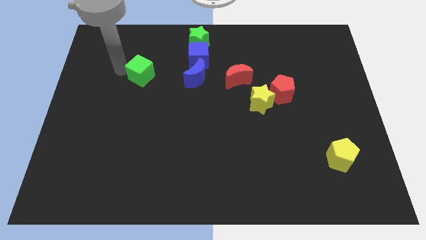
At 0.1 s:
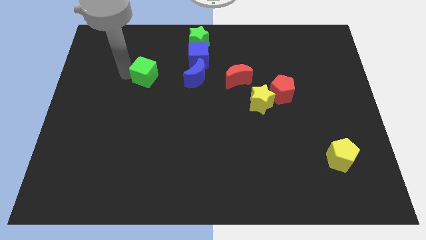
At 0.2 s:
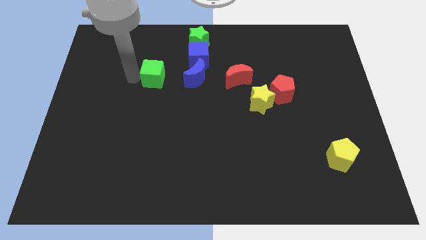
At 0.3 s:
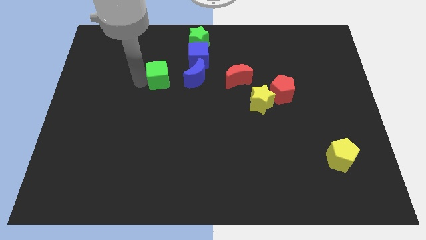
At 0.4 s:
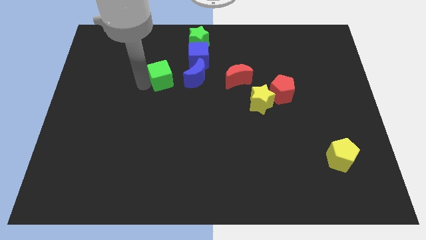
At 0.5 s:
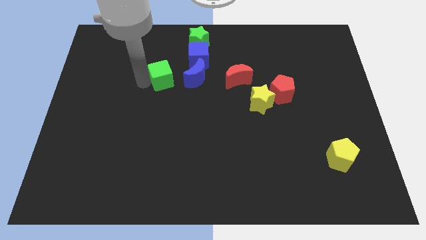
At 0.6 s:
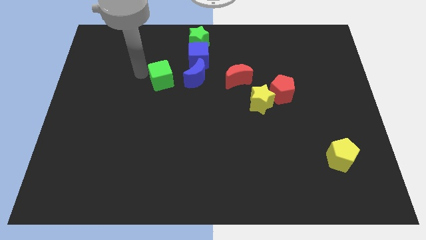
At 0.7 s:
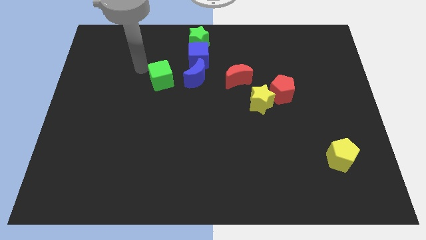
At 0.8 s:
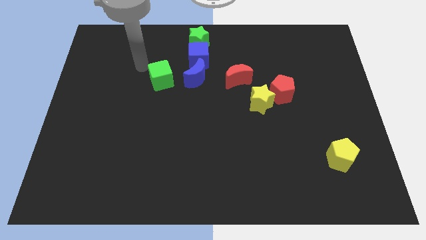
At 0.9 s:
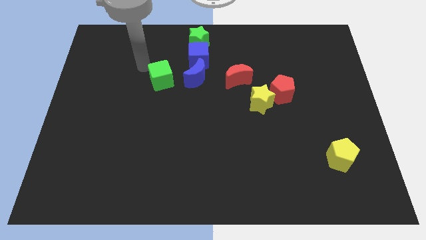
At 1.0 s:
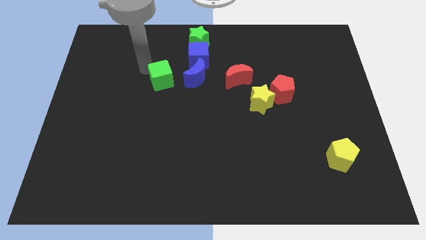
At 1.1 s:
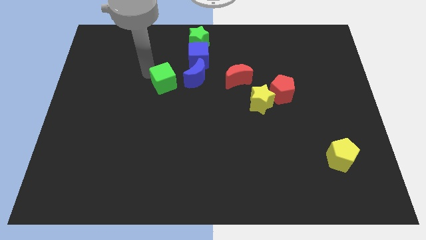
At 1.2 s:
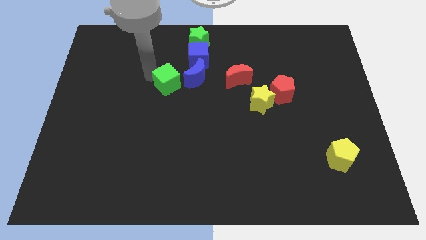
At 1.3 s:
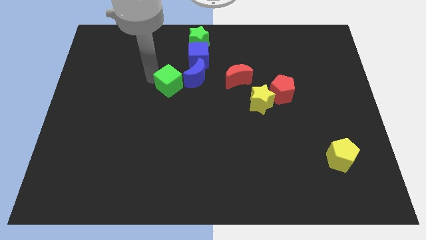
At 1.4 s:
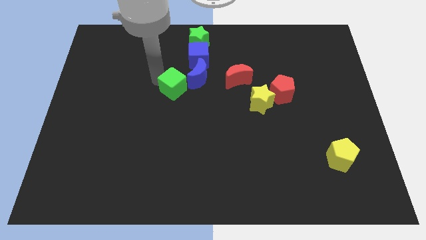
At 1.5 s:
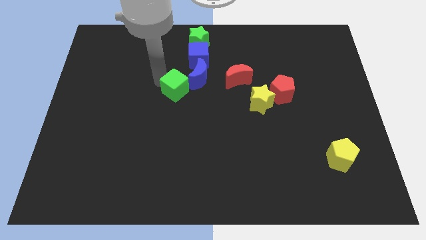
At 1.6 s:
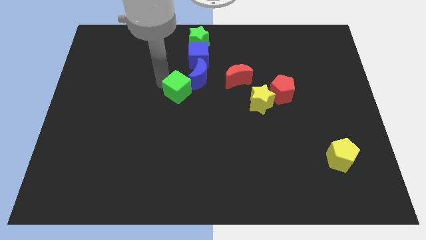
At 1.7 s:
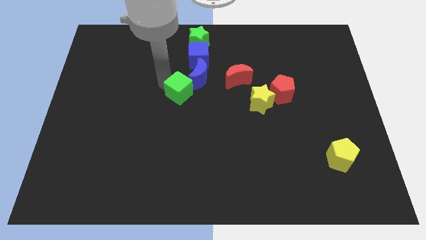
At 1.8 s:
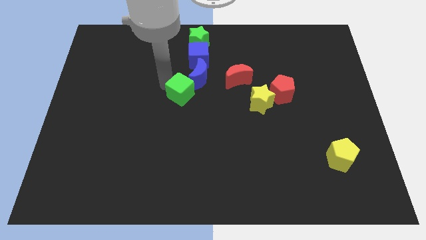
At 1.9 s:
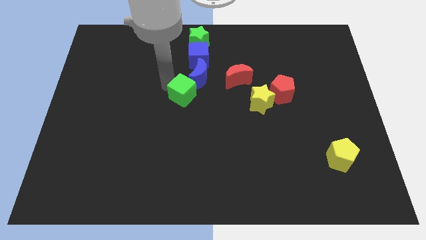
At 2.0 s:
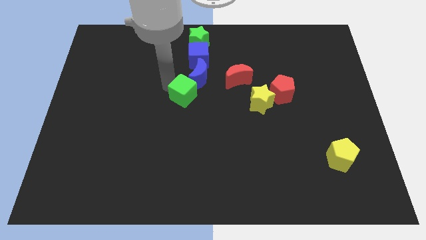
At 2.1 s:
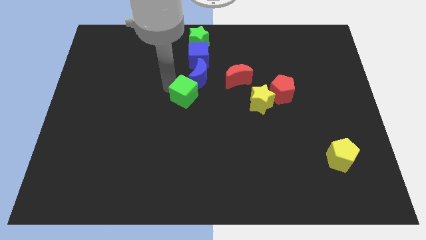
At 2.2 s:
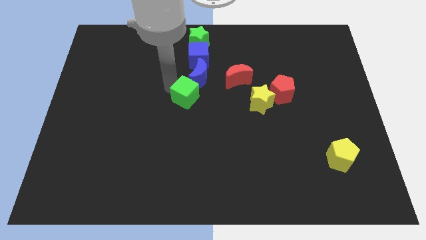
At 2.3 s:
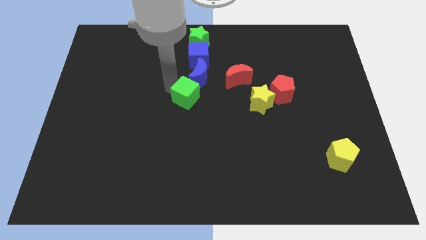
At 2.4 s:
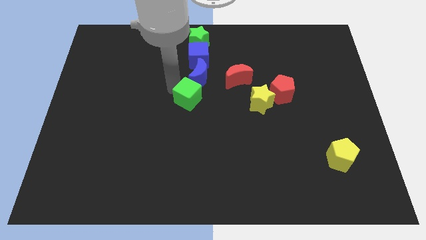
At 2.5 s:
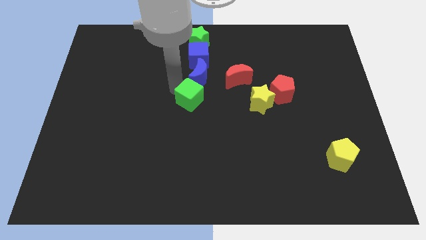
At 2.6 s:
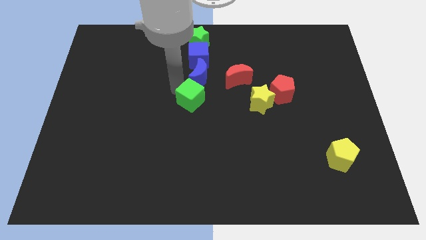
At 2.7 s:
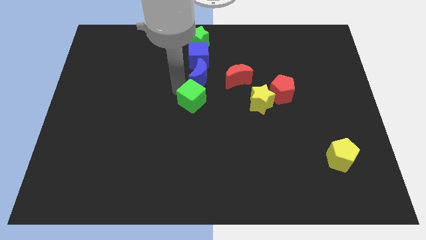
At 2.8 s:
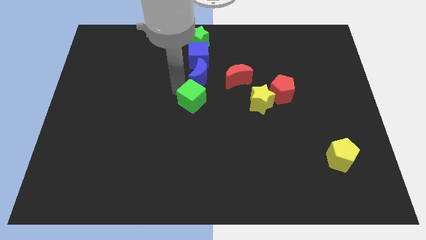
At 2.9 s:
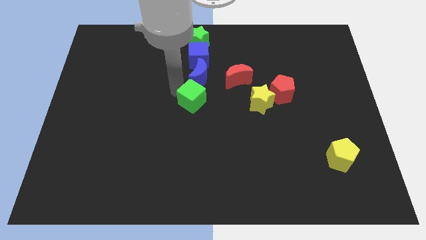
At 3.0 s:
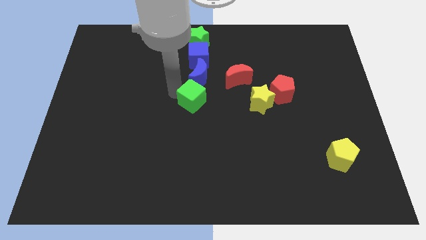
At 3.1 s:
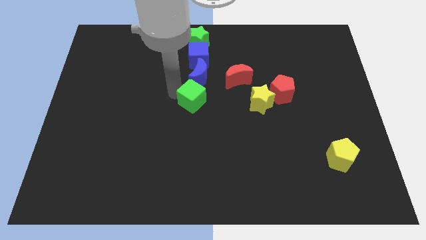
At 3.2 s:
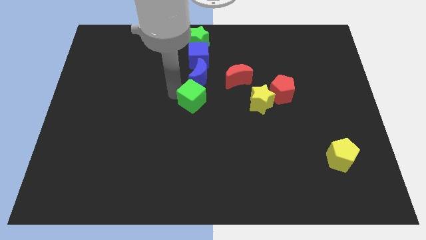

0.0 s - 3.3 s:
move green cube below blue moon

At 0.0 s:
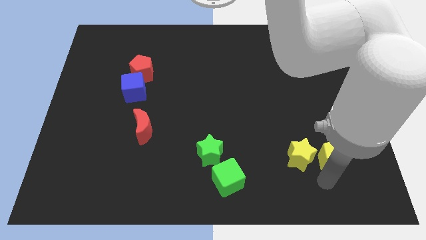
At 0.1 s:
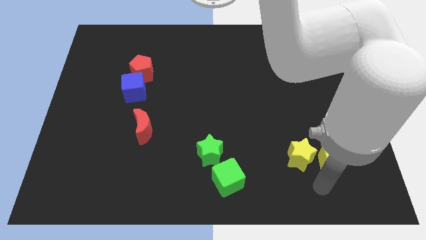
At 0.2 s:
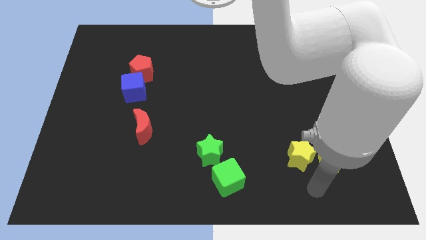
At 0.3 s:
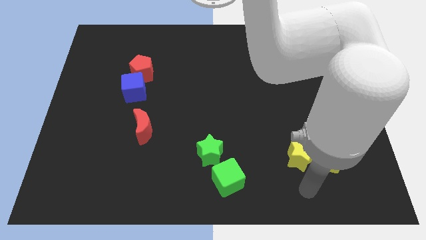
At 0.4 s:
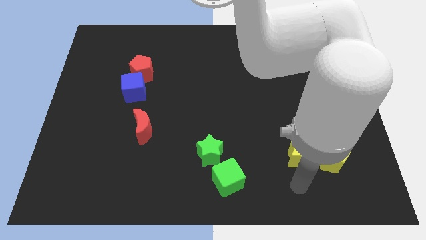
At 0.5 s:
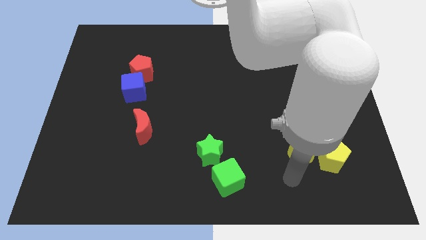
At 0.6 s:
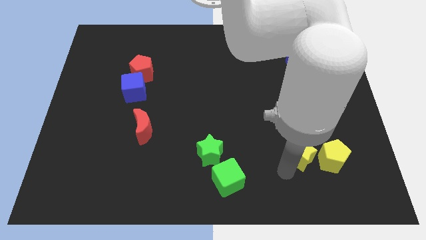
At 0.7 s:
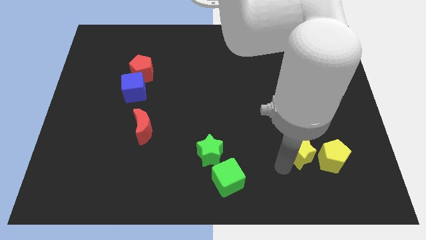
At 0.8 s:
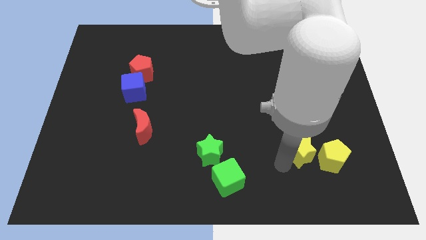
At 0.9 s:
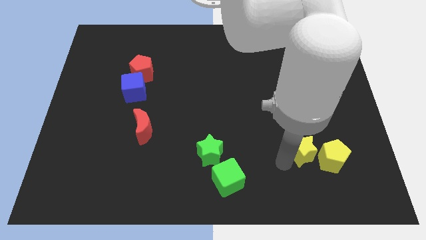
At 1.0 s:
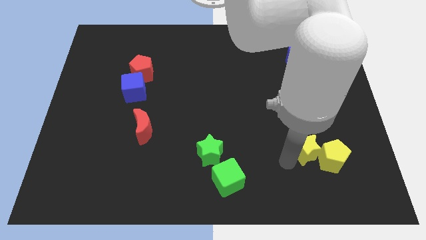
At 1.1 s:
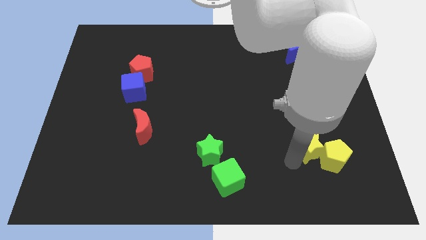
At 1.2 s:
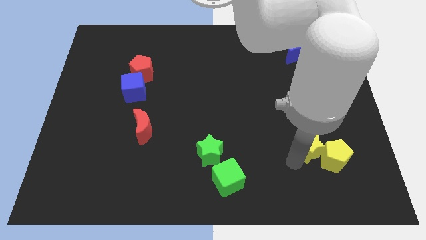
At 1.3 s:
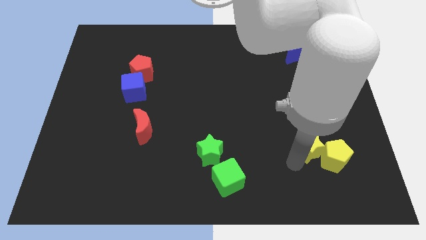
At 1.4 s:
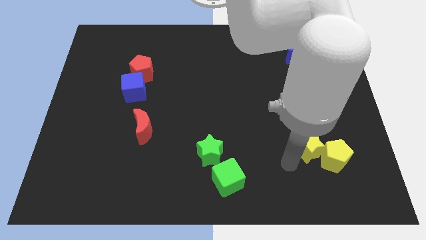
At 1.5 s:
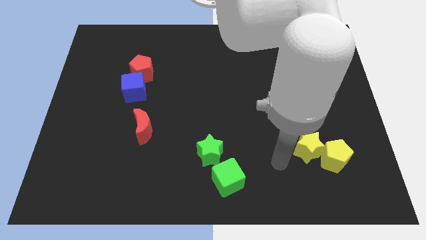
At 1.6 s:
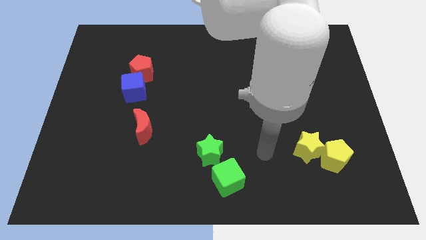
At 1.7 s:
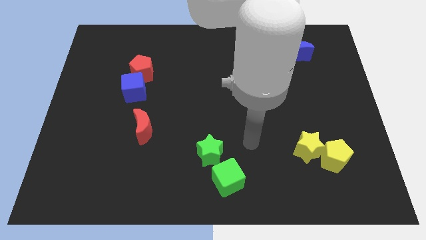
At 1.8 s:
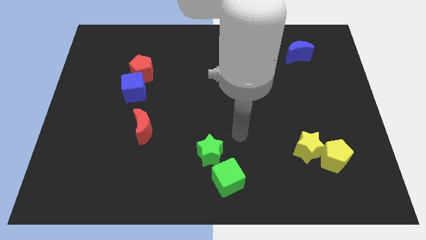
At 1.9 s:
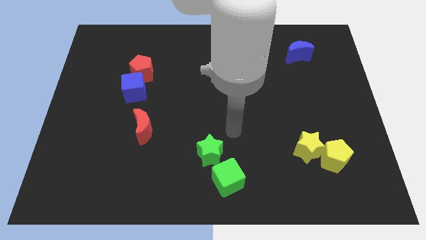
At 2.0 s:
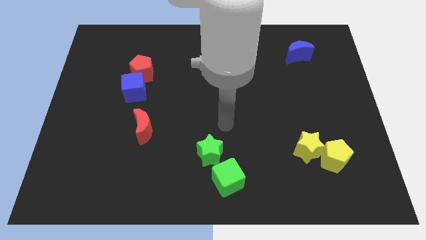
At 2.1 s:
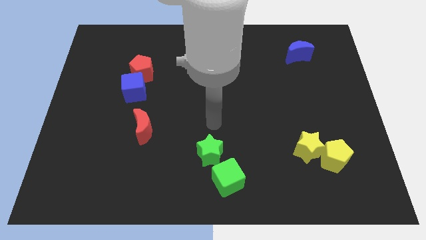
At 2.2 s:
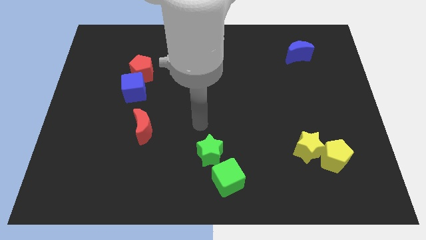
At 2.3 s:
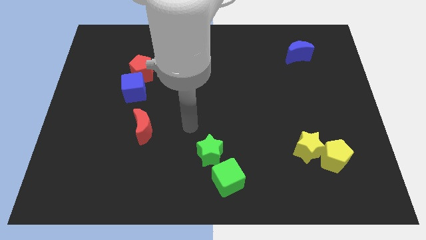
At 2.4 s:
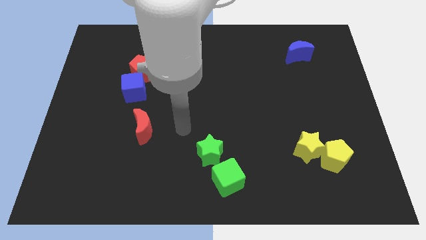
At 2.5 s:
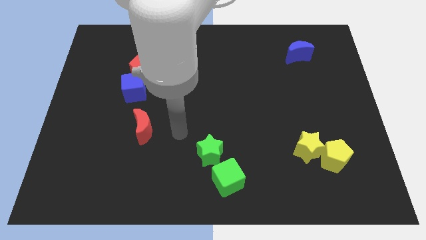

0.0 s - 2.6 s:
move yellow star and the yellow pentagon slightly towards right side

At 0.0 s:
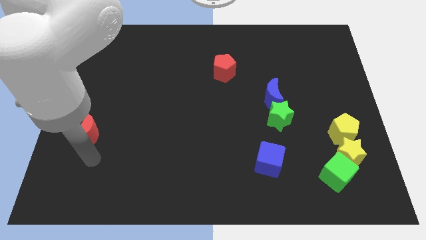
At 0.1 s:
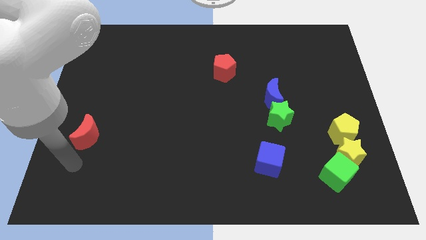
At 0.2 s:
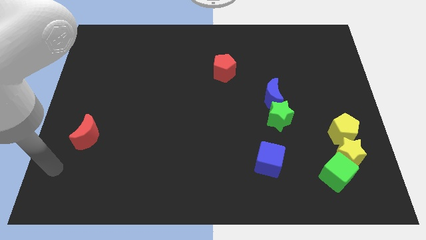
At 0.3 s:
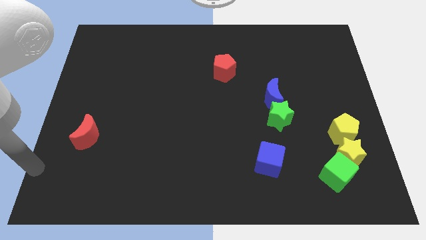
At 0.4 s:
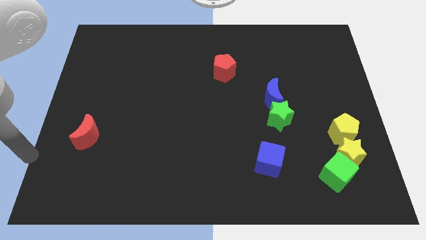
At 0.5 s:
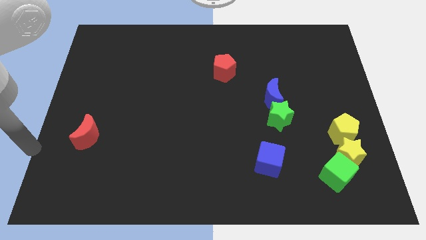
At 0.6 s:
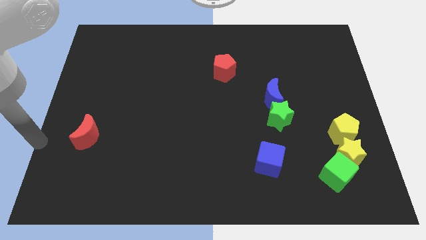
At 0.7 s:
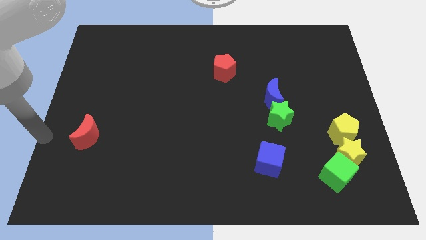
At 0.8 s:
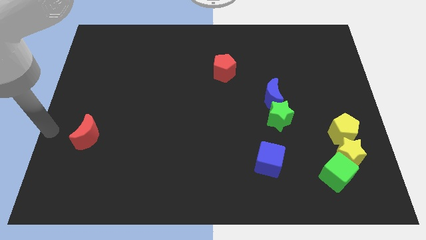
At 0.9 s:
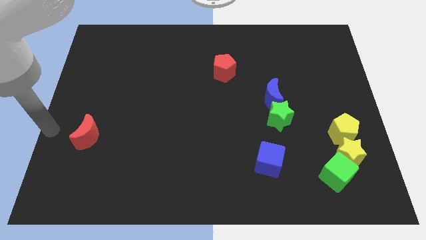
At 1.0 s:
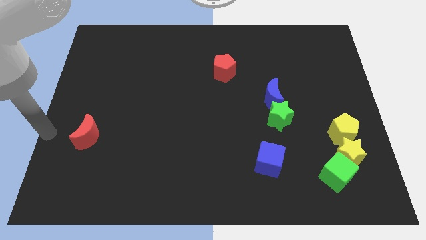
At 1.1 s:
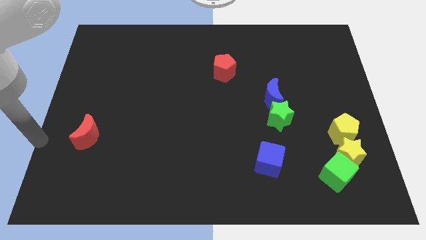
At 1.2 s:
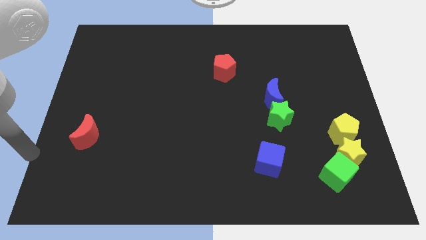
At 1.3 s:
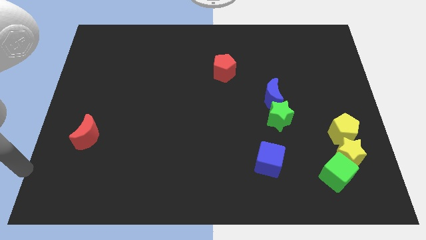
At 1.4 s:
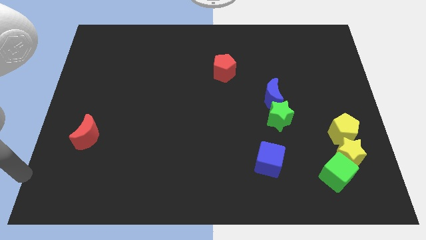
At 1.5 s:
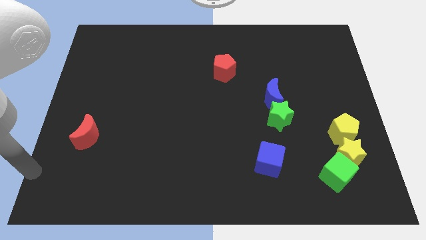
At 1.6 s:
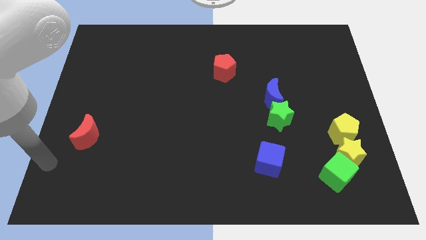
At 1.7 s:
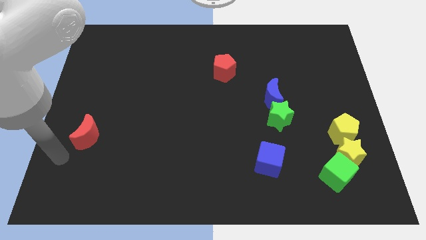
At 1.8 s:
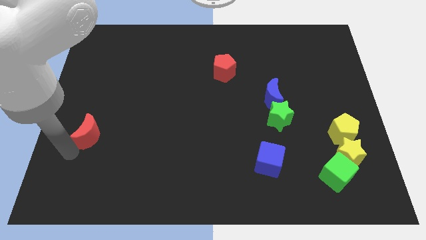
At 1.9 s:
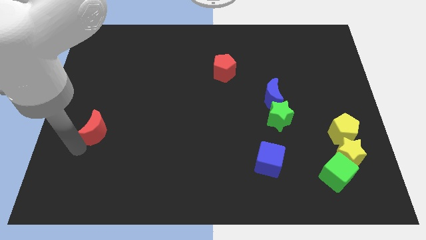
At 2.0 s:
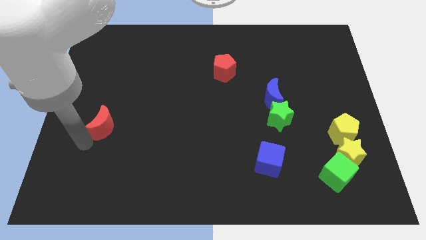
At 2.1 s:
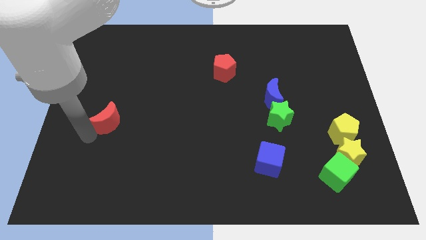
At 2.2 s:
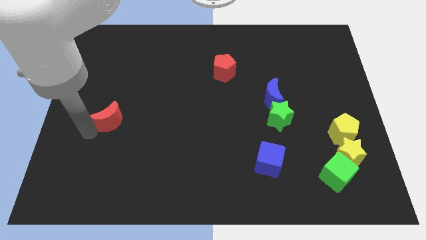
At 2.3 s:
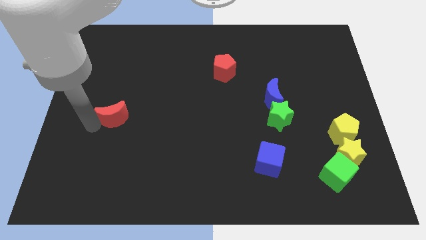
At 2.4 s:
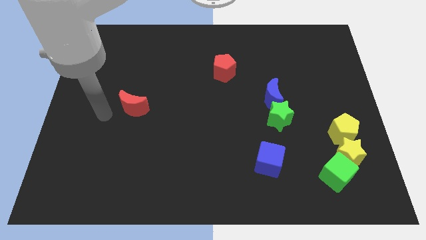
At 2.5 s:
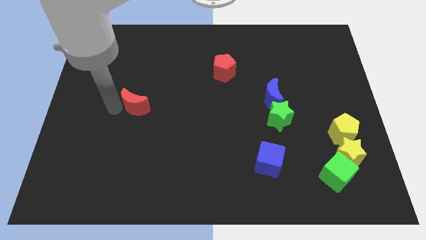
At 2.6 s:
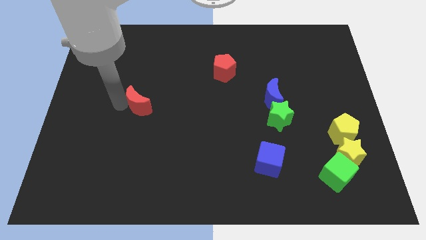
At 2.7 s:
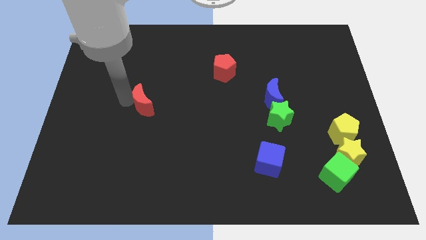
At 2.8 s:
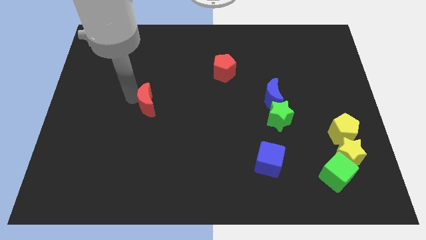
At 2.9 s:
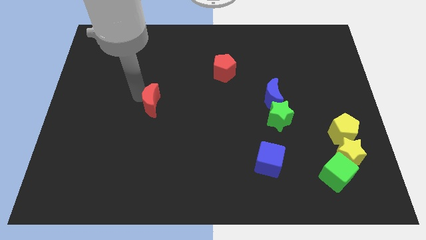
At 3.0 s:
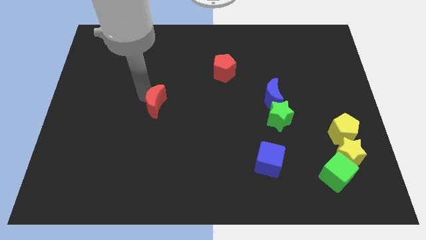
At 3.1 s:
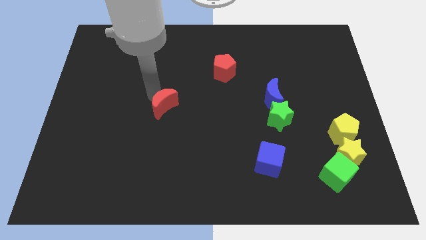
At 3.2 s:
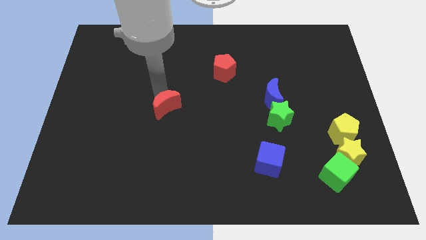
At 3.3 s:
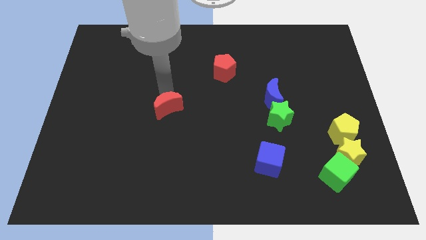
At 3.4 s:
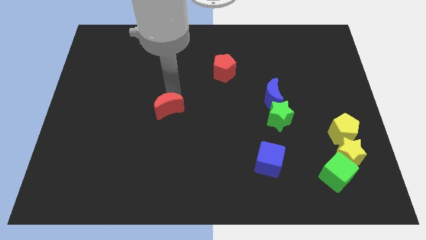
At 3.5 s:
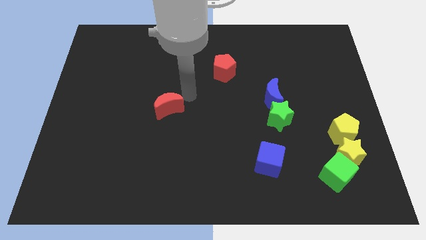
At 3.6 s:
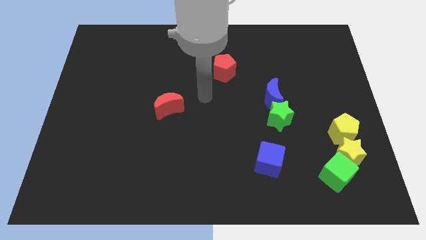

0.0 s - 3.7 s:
push the red crescent to the left of blue crescent
